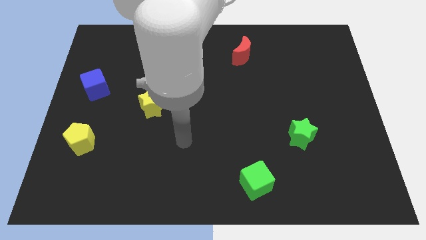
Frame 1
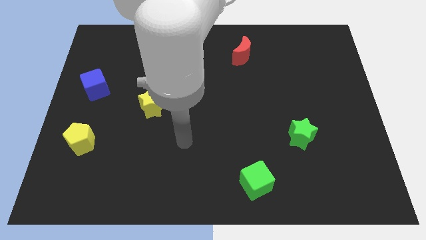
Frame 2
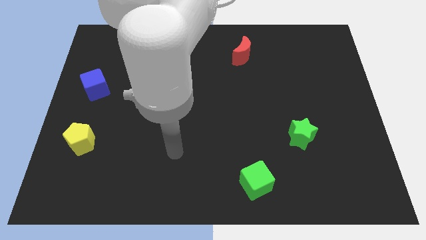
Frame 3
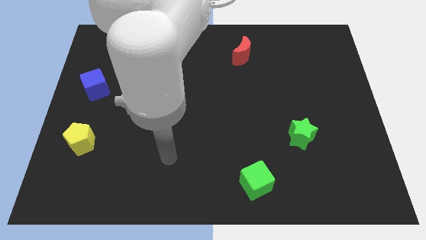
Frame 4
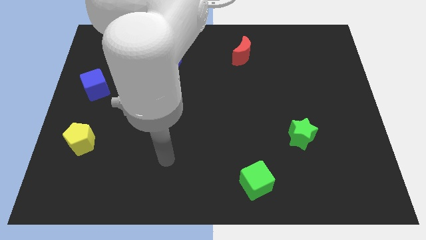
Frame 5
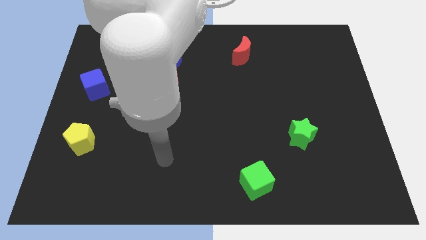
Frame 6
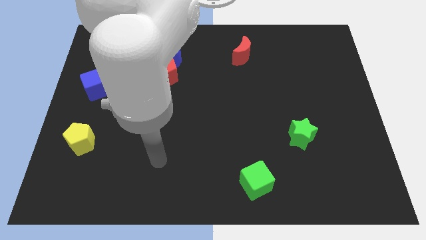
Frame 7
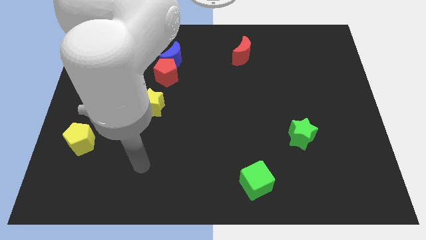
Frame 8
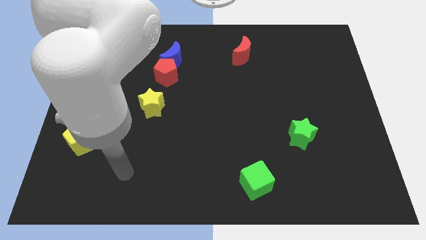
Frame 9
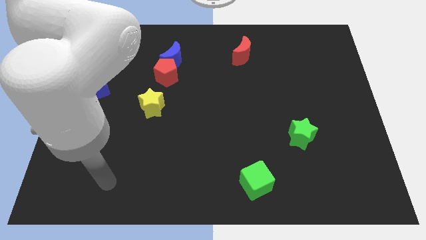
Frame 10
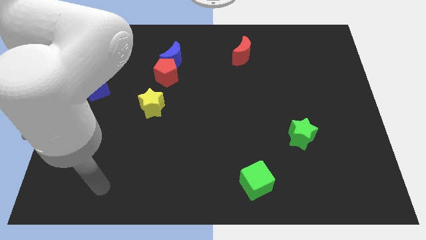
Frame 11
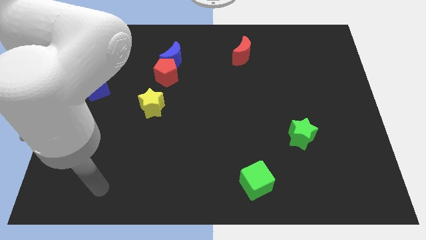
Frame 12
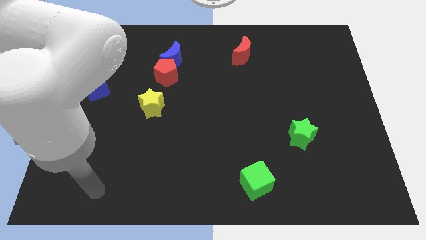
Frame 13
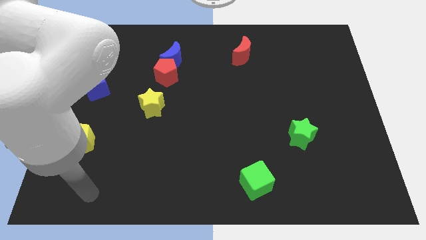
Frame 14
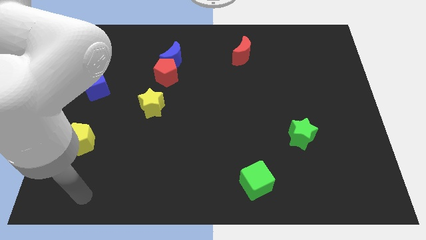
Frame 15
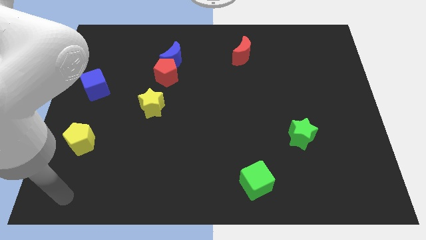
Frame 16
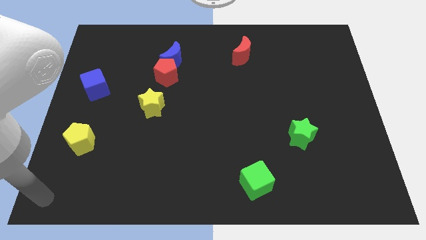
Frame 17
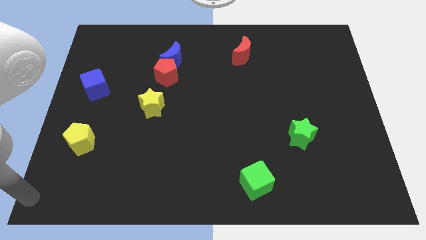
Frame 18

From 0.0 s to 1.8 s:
slide your arm to the bottom left of the board

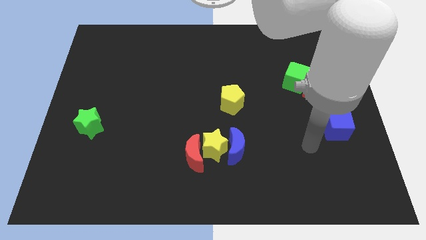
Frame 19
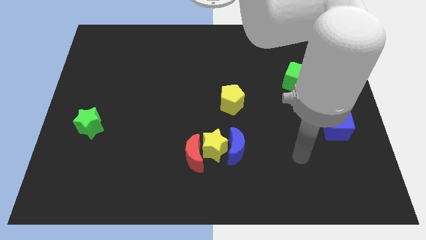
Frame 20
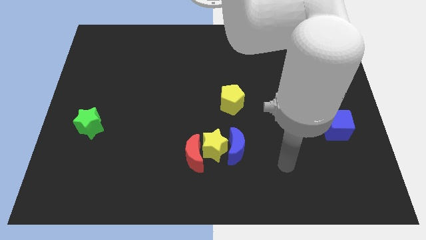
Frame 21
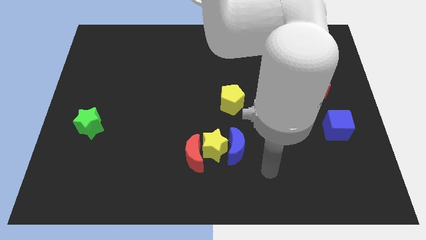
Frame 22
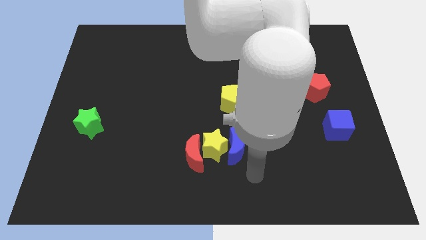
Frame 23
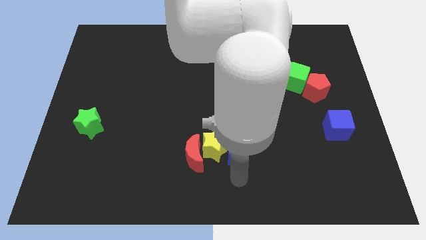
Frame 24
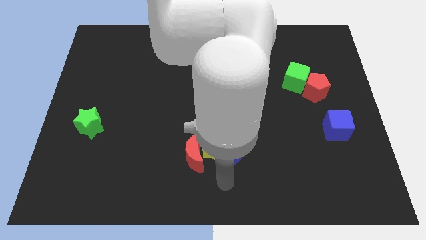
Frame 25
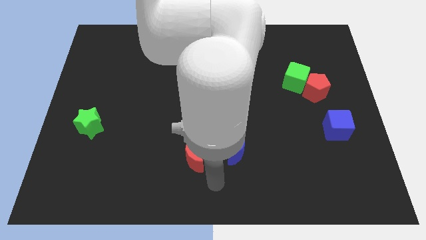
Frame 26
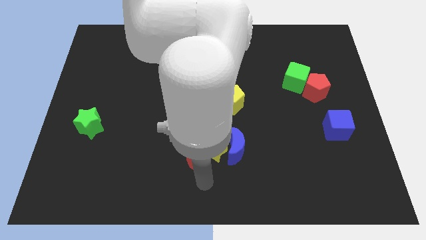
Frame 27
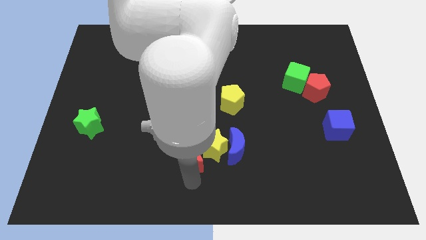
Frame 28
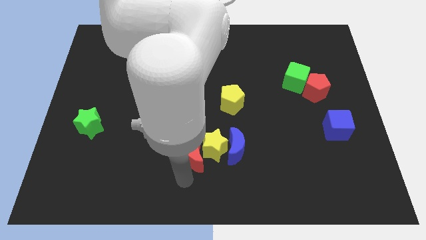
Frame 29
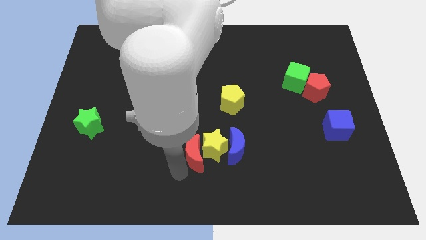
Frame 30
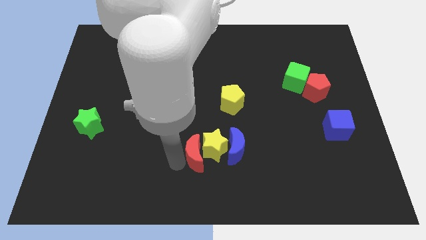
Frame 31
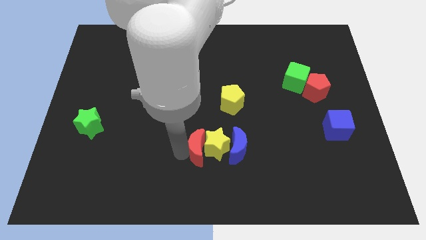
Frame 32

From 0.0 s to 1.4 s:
move your arm to the left of the red crescent

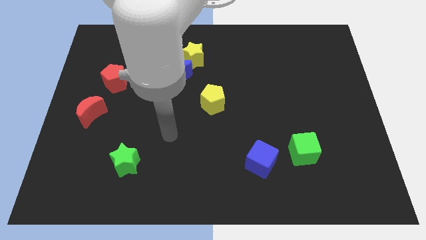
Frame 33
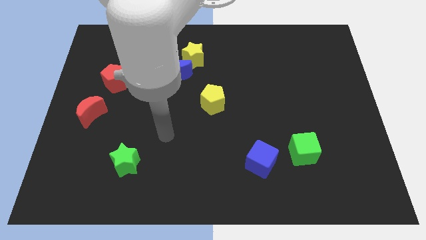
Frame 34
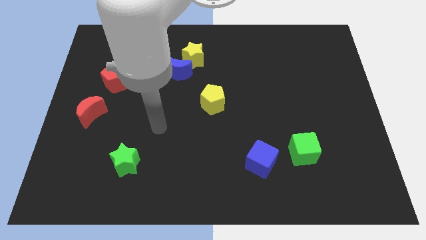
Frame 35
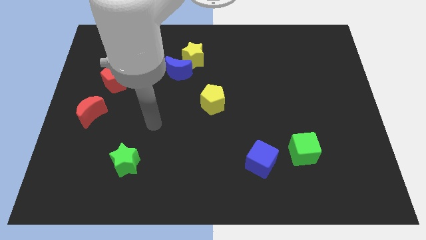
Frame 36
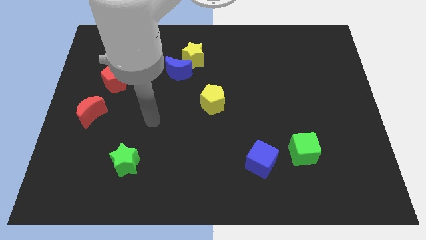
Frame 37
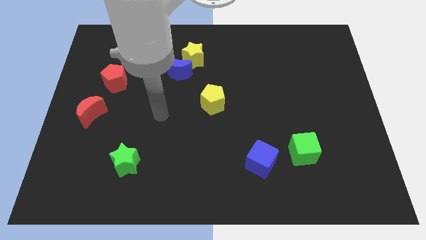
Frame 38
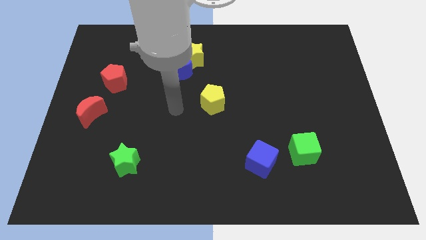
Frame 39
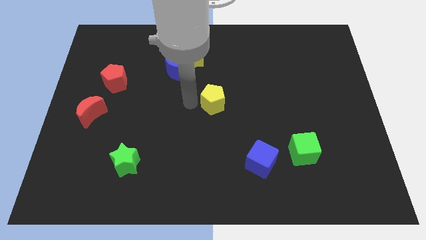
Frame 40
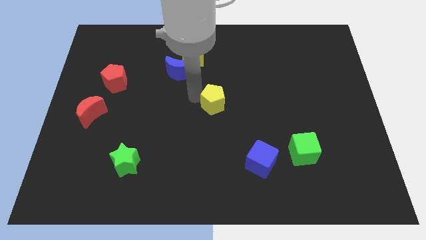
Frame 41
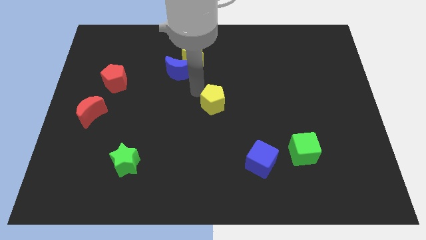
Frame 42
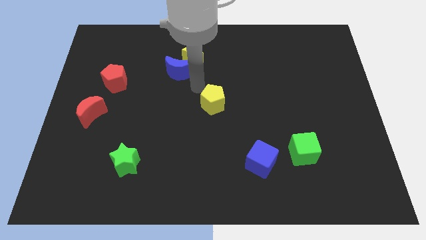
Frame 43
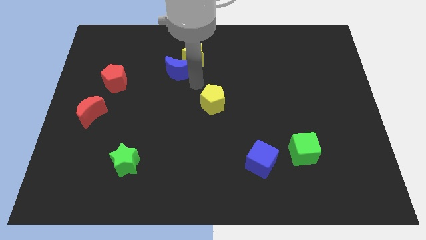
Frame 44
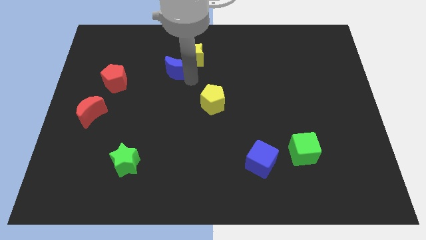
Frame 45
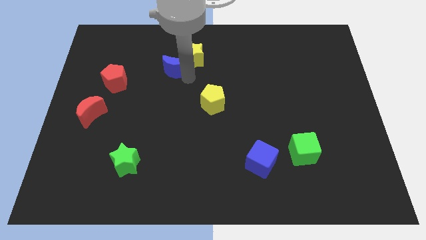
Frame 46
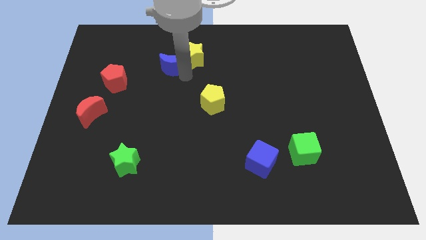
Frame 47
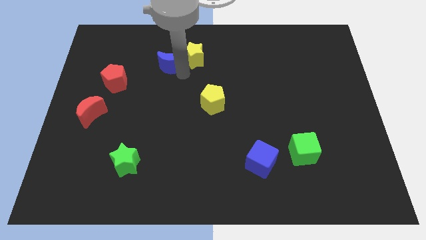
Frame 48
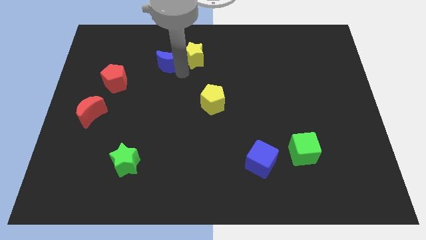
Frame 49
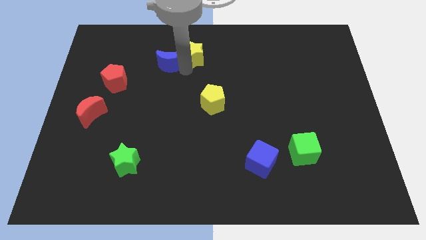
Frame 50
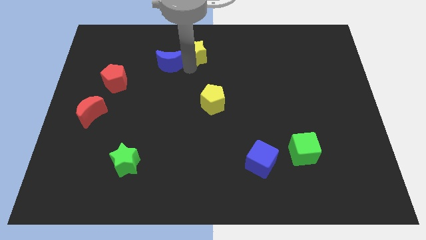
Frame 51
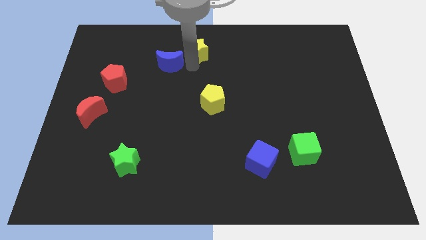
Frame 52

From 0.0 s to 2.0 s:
move the blue crescent towards the left side of the yellow star

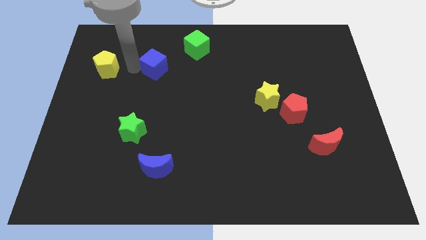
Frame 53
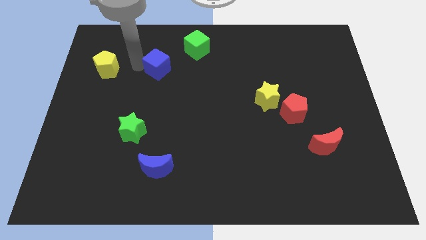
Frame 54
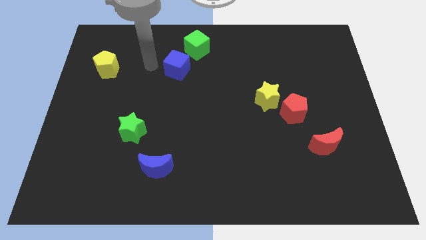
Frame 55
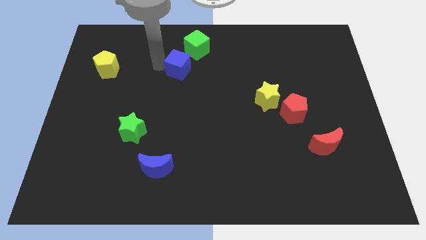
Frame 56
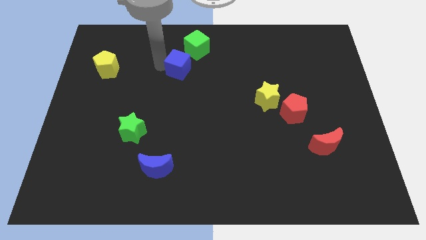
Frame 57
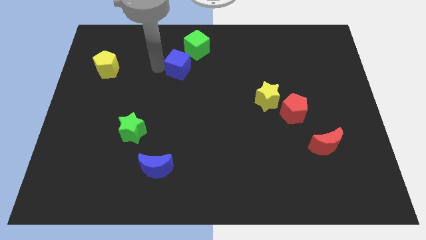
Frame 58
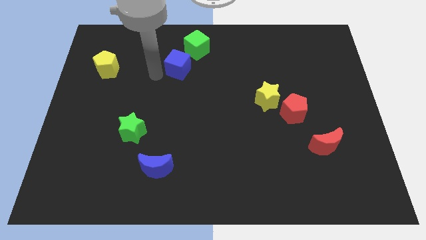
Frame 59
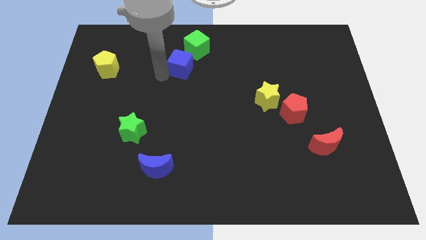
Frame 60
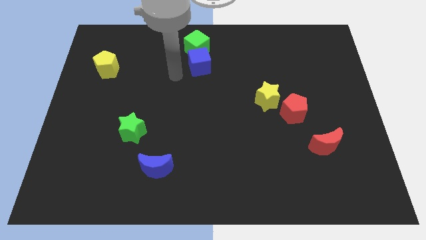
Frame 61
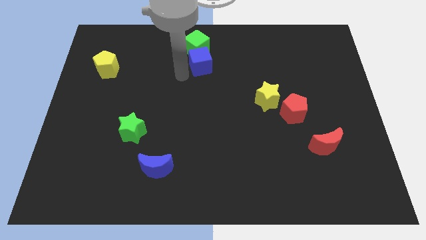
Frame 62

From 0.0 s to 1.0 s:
place blue cube below green cube

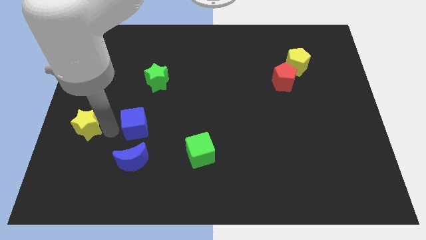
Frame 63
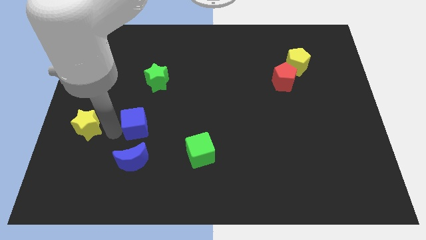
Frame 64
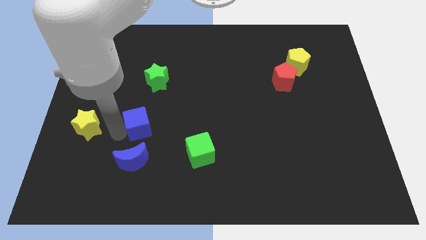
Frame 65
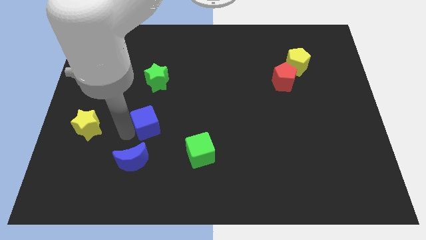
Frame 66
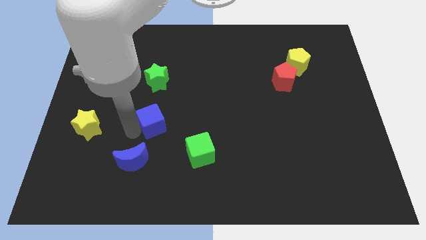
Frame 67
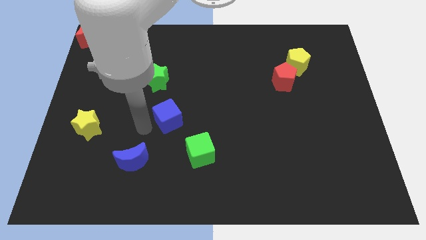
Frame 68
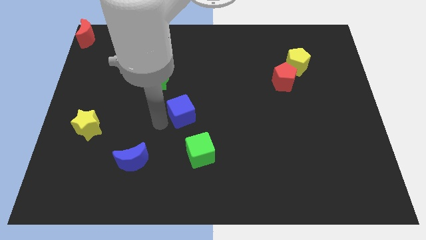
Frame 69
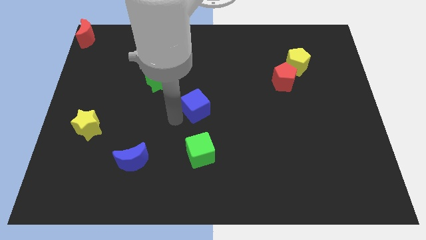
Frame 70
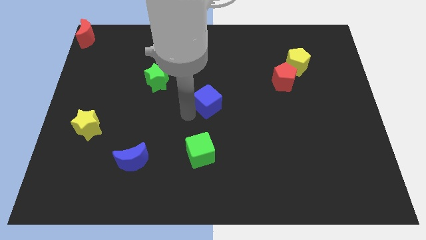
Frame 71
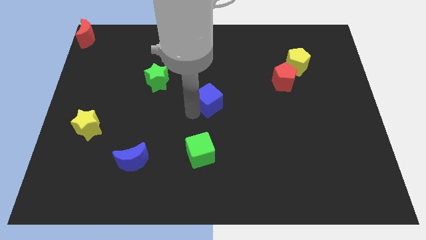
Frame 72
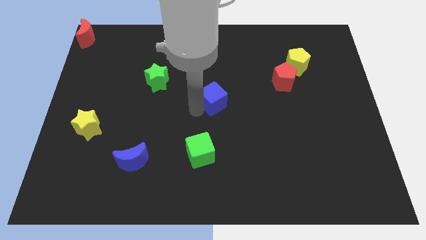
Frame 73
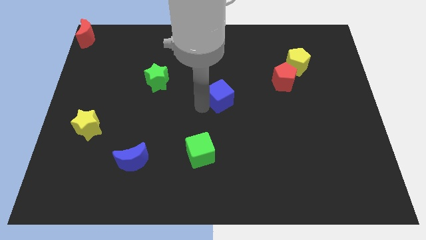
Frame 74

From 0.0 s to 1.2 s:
move the blue cube to the center

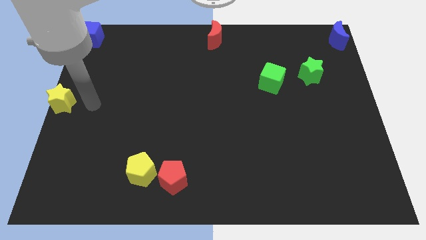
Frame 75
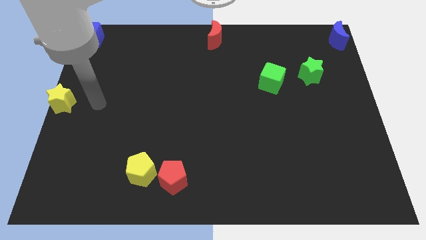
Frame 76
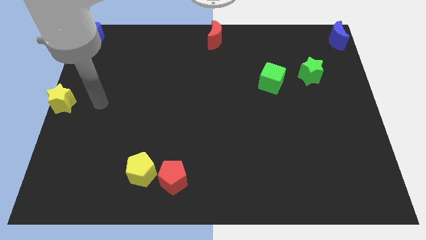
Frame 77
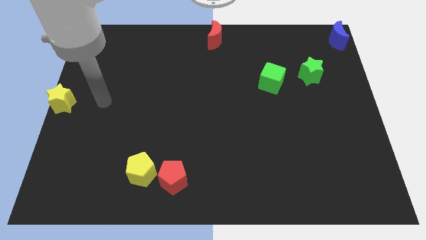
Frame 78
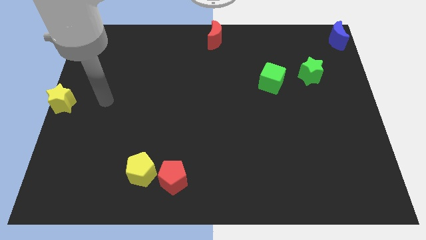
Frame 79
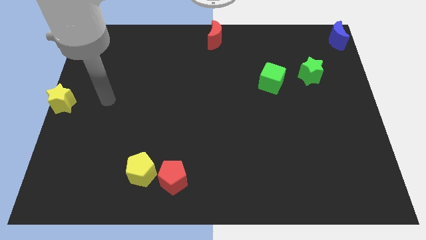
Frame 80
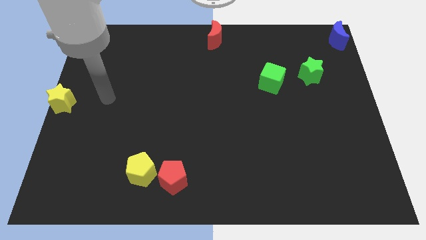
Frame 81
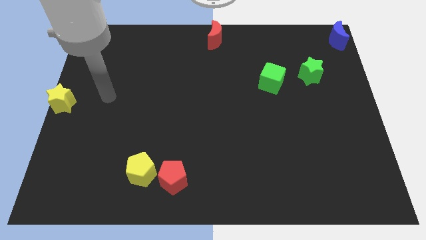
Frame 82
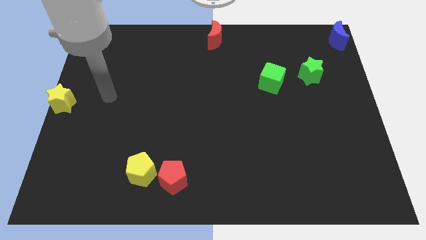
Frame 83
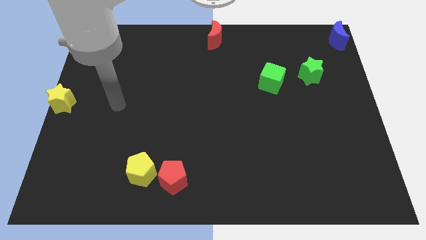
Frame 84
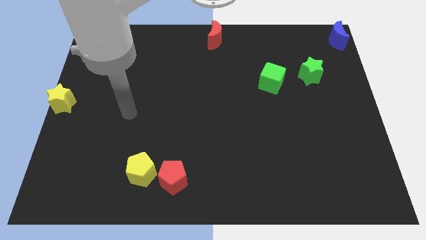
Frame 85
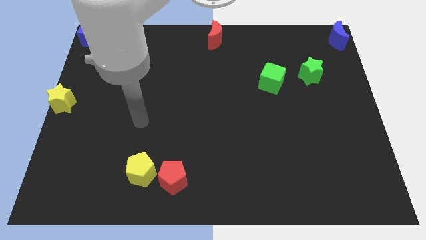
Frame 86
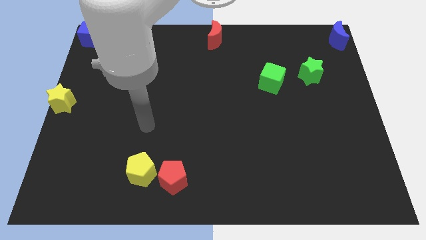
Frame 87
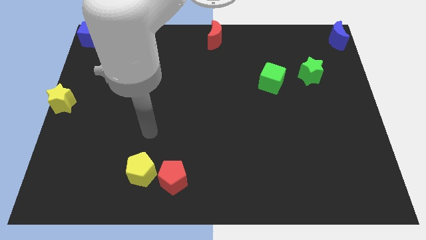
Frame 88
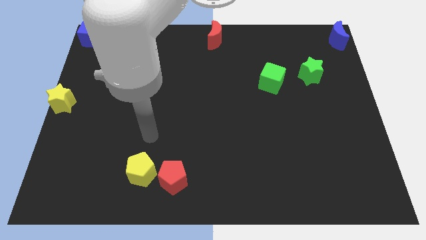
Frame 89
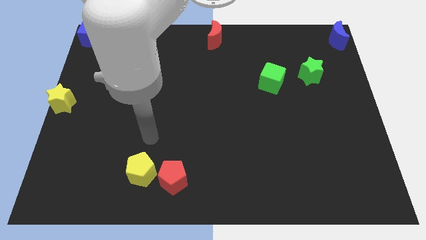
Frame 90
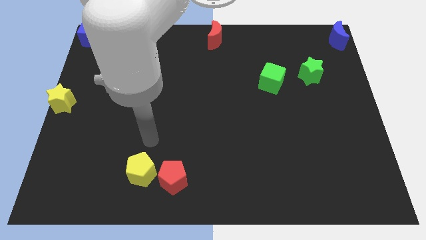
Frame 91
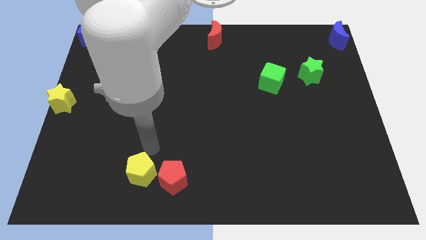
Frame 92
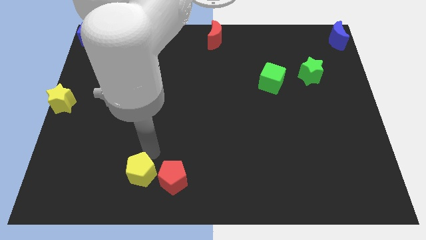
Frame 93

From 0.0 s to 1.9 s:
place your arm at the top of yellow pentagon
